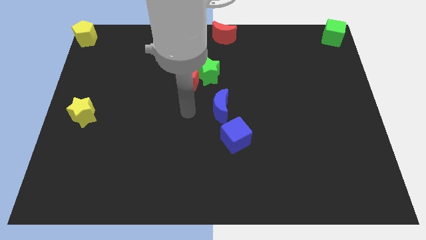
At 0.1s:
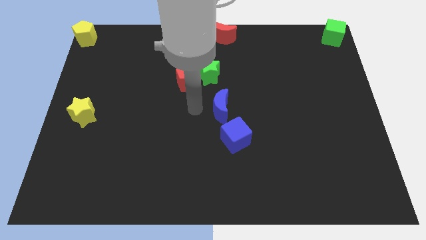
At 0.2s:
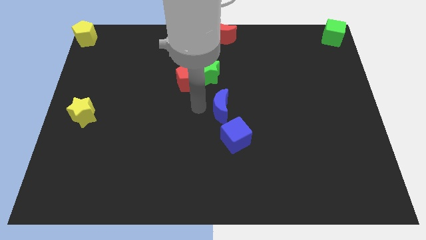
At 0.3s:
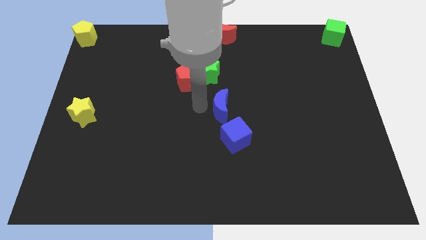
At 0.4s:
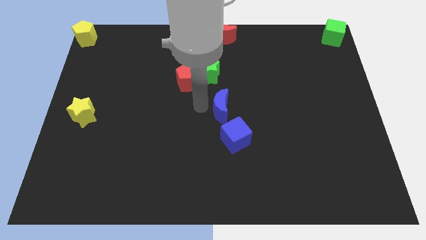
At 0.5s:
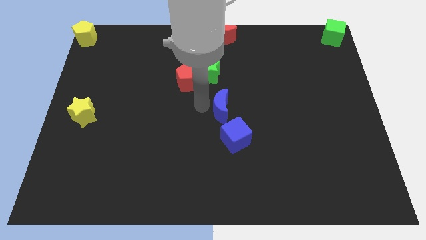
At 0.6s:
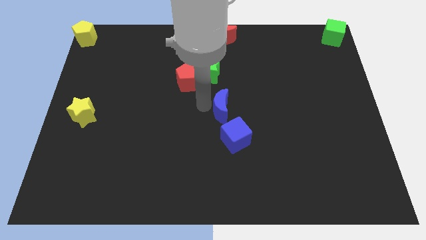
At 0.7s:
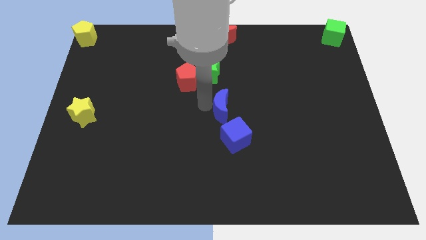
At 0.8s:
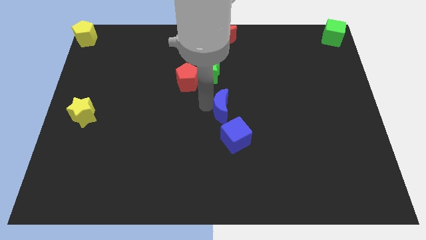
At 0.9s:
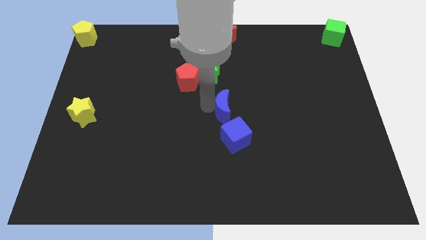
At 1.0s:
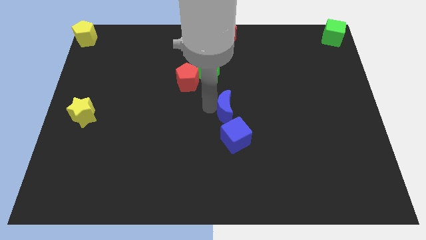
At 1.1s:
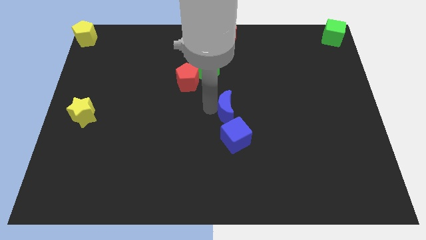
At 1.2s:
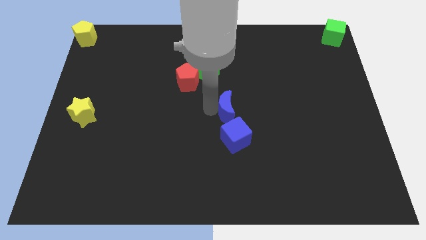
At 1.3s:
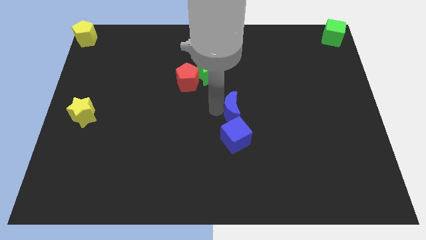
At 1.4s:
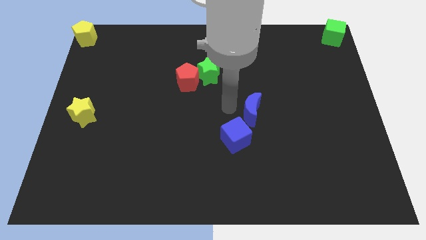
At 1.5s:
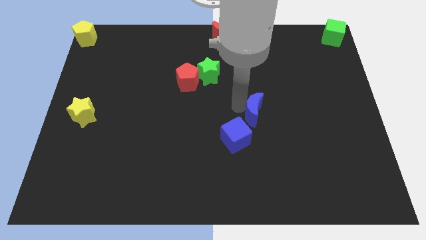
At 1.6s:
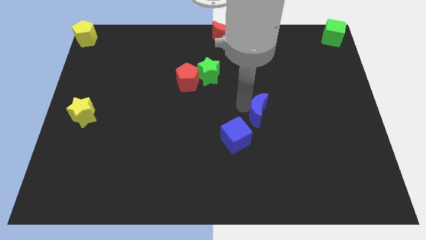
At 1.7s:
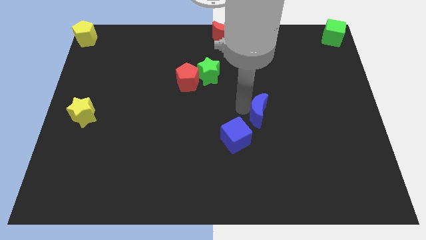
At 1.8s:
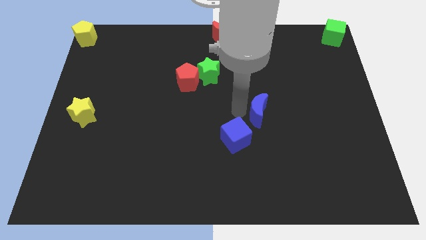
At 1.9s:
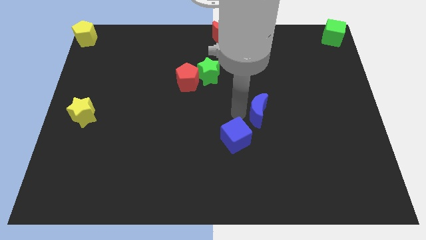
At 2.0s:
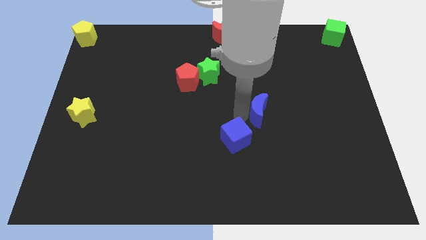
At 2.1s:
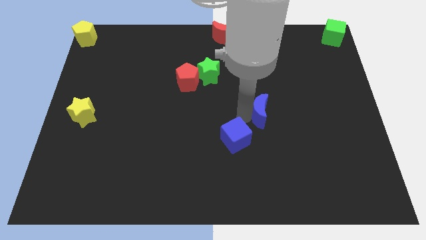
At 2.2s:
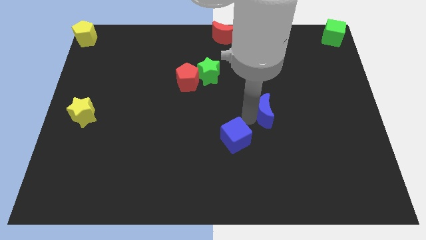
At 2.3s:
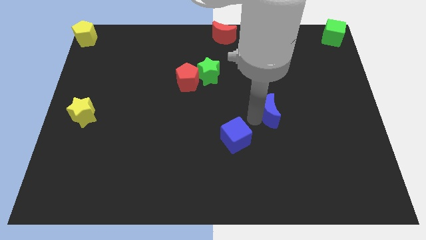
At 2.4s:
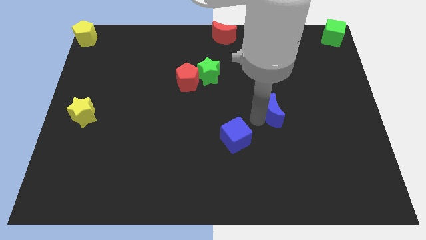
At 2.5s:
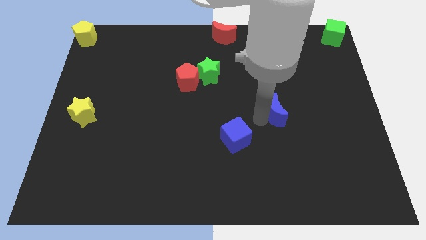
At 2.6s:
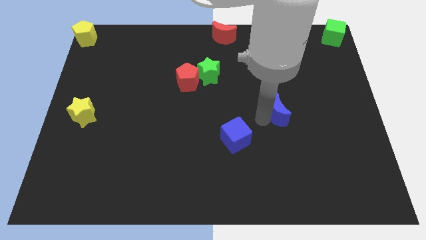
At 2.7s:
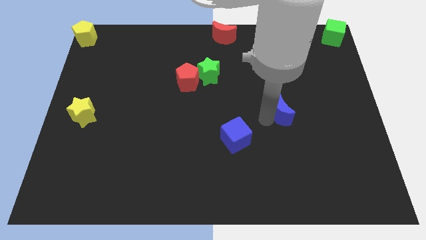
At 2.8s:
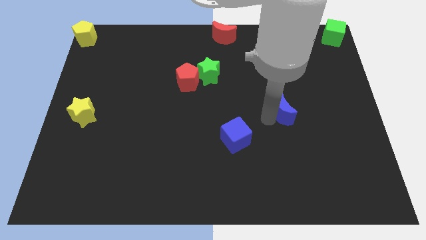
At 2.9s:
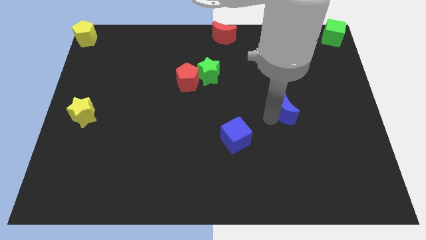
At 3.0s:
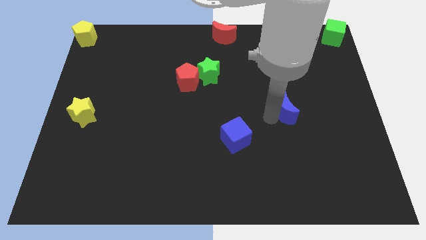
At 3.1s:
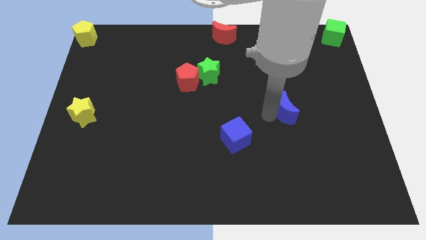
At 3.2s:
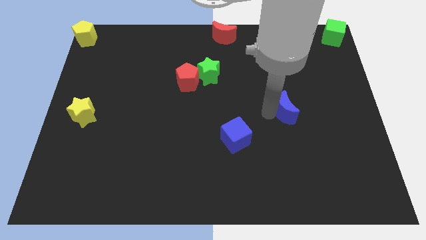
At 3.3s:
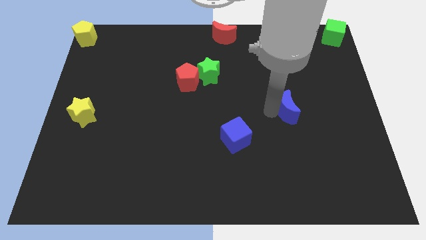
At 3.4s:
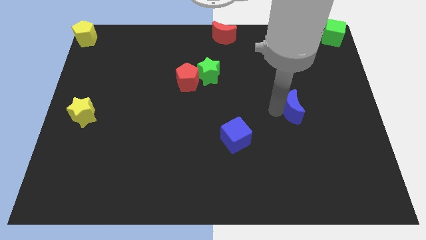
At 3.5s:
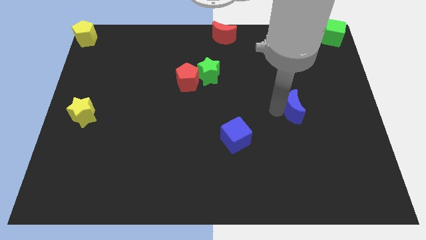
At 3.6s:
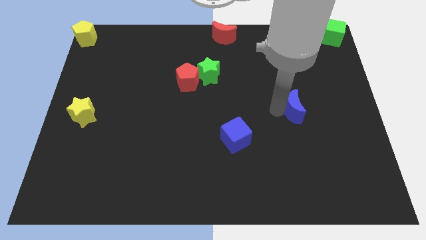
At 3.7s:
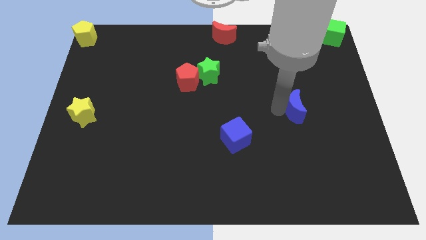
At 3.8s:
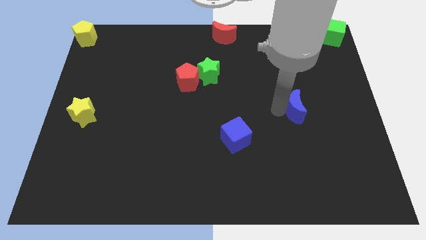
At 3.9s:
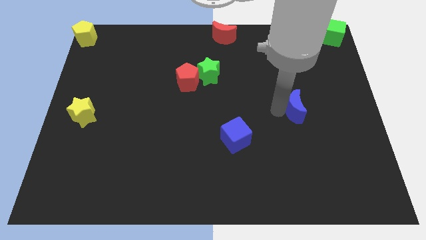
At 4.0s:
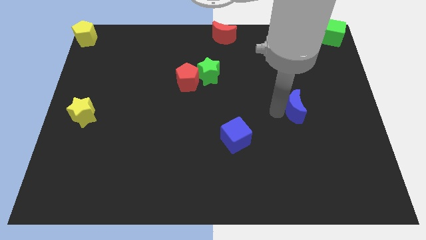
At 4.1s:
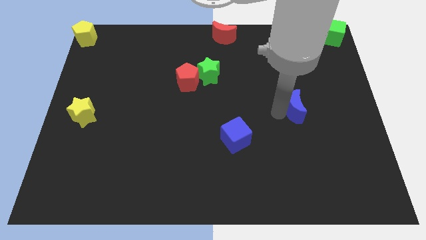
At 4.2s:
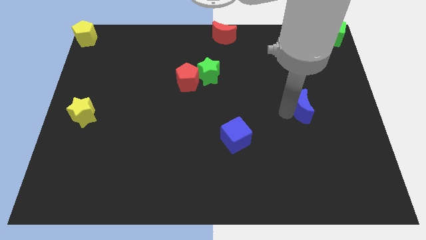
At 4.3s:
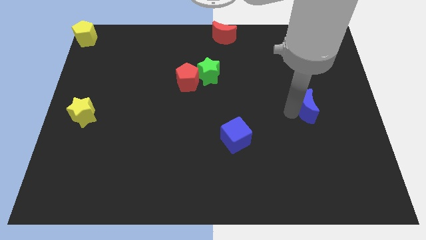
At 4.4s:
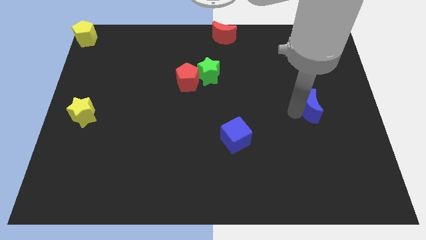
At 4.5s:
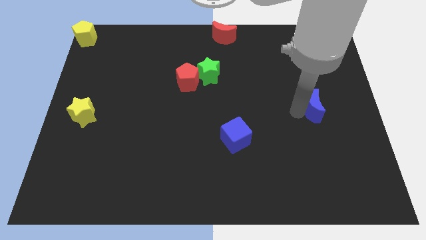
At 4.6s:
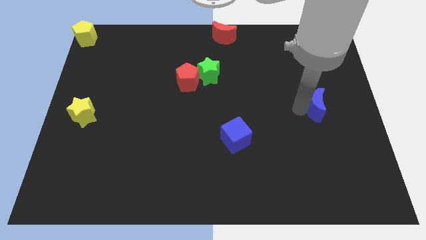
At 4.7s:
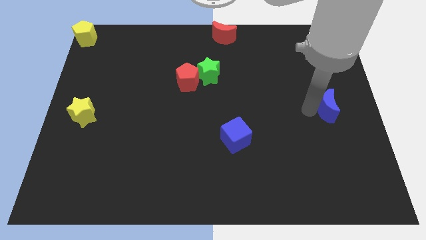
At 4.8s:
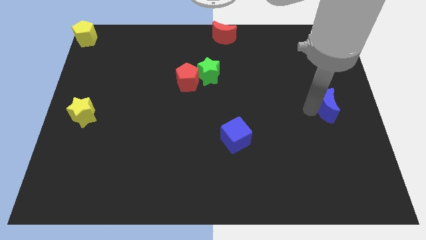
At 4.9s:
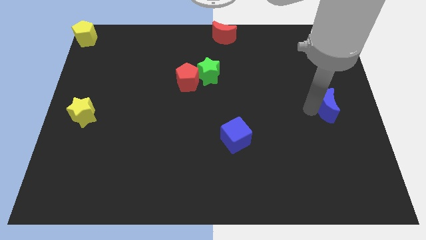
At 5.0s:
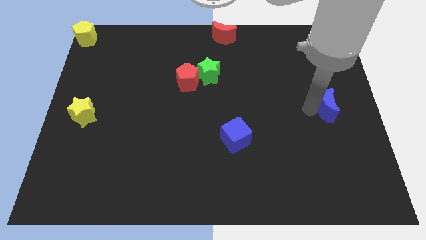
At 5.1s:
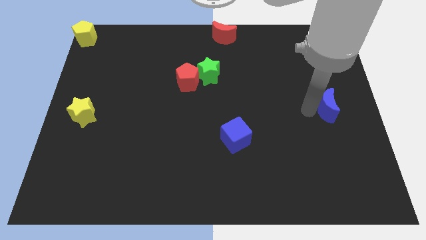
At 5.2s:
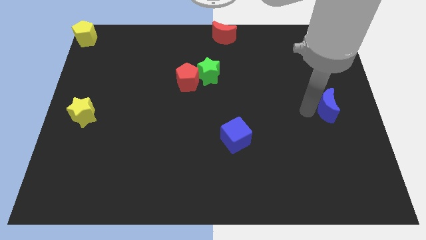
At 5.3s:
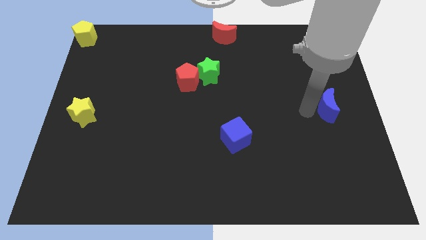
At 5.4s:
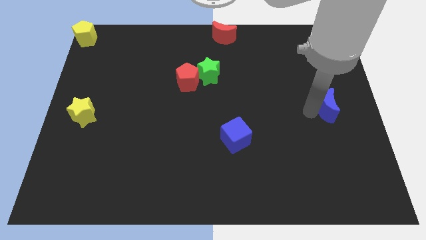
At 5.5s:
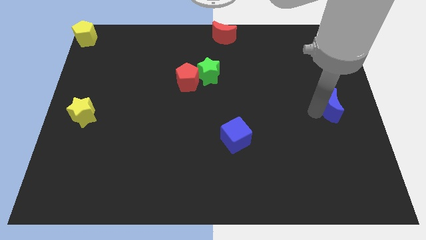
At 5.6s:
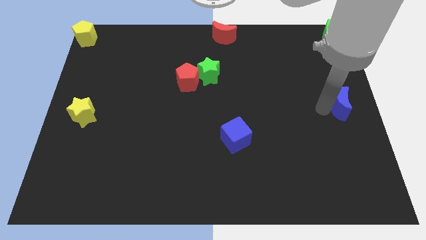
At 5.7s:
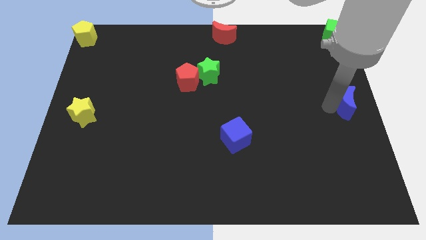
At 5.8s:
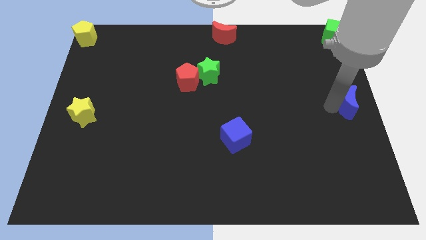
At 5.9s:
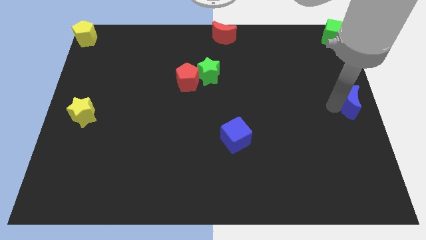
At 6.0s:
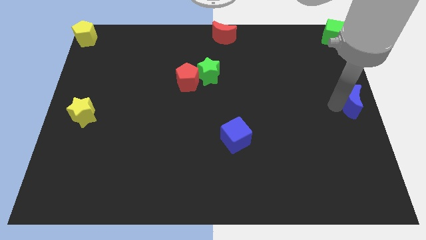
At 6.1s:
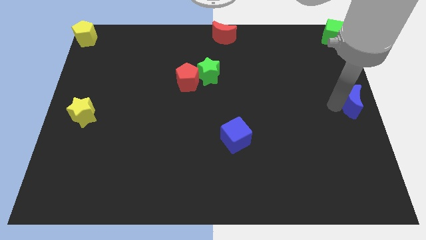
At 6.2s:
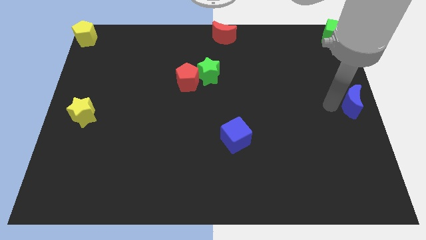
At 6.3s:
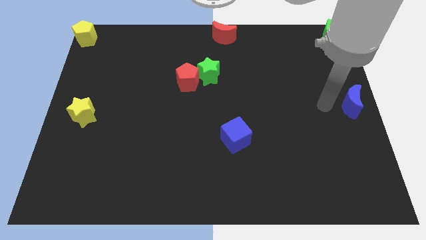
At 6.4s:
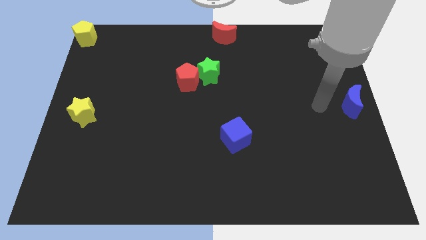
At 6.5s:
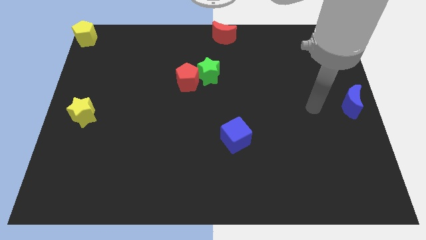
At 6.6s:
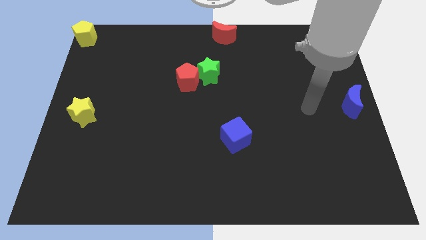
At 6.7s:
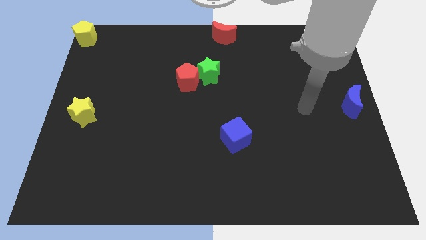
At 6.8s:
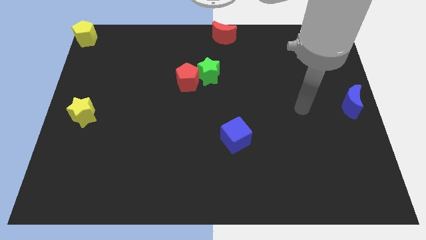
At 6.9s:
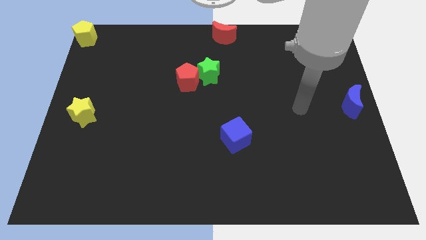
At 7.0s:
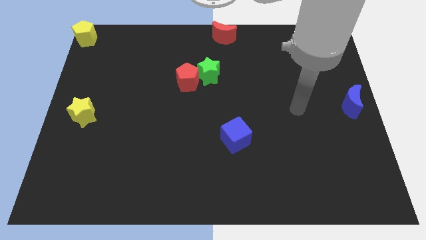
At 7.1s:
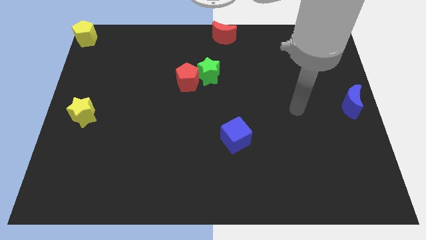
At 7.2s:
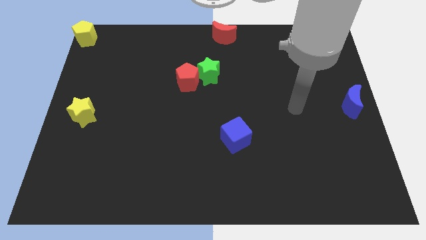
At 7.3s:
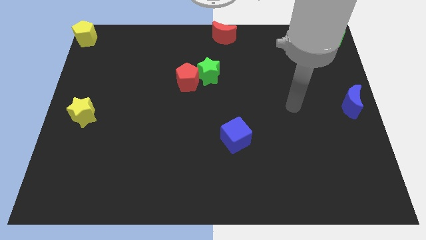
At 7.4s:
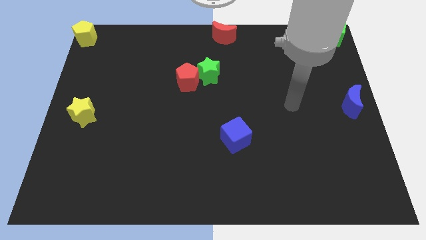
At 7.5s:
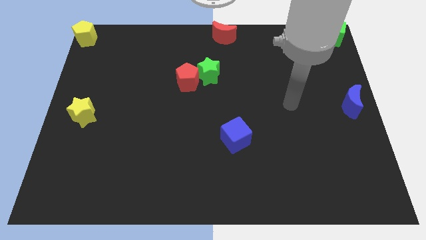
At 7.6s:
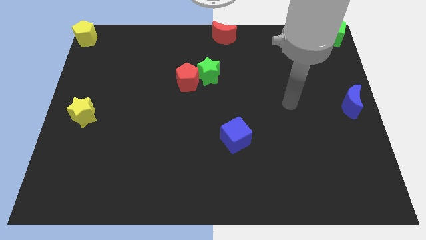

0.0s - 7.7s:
push the blue crescent to center right of the board

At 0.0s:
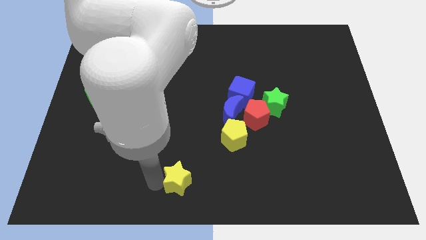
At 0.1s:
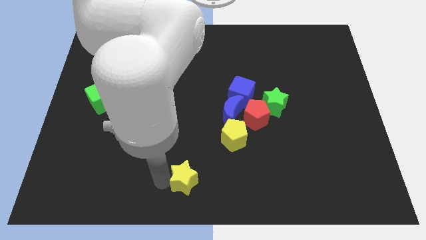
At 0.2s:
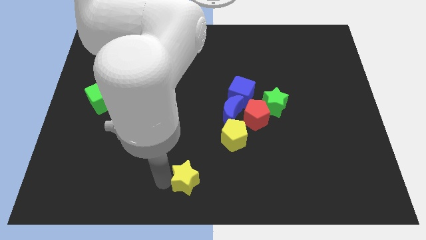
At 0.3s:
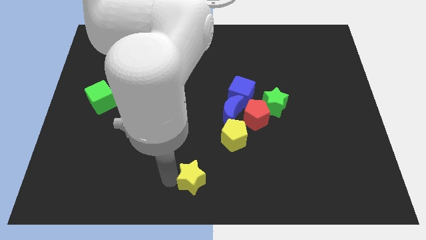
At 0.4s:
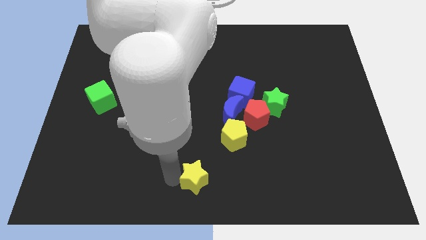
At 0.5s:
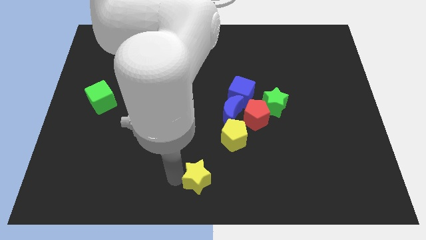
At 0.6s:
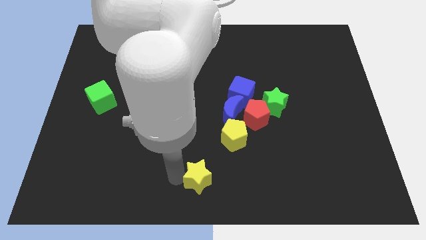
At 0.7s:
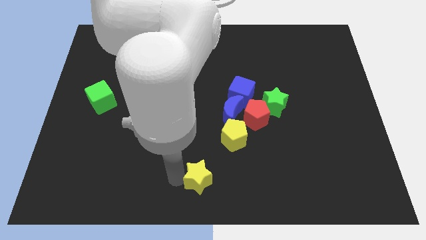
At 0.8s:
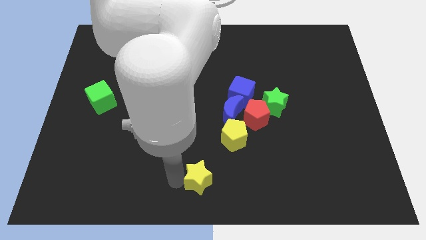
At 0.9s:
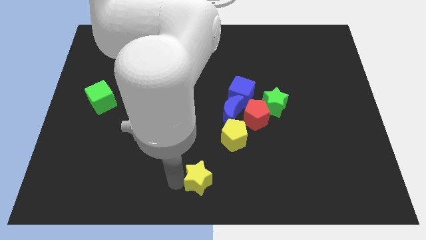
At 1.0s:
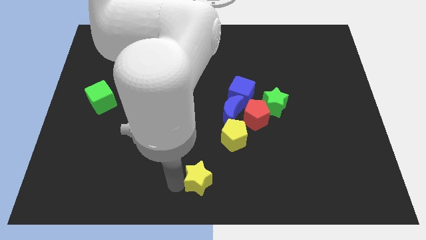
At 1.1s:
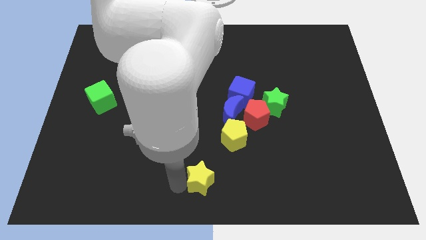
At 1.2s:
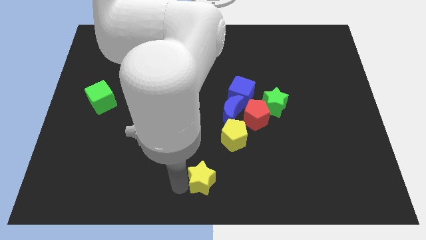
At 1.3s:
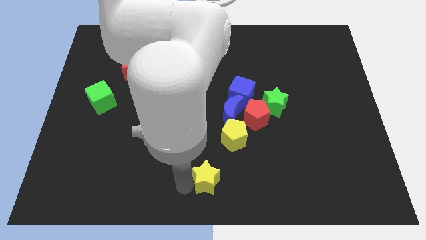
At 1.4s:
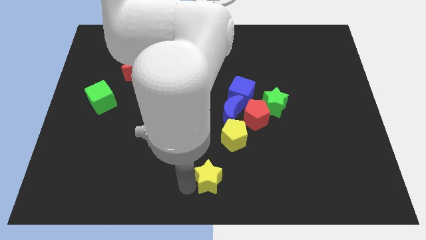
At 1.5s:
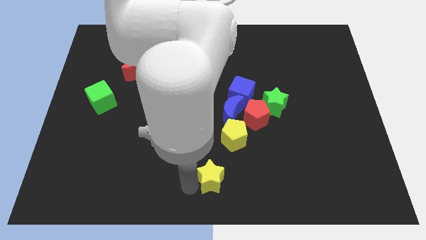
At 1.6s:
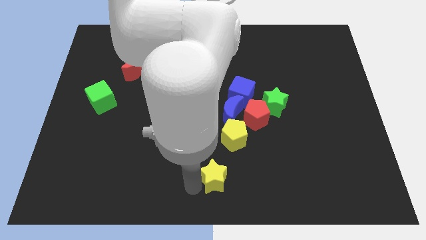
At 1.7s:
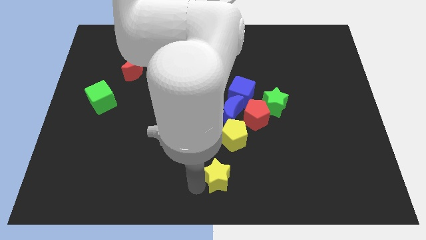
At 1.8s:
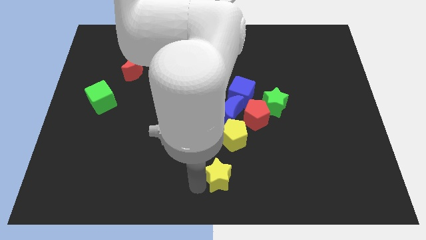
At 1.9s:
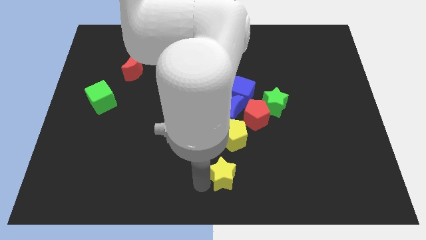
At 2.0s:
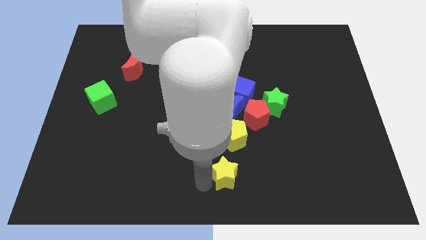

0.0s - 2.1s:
slide yellow star below the yellow pentagon
